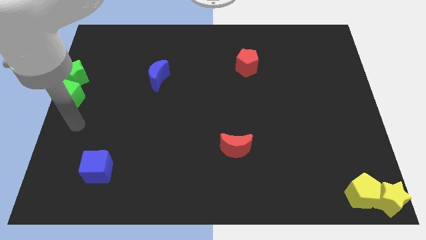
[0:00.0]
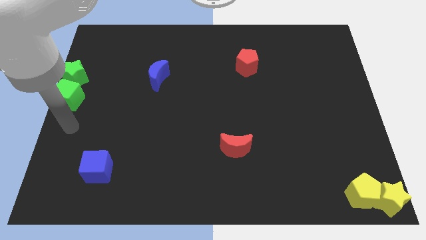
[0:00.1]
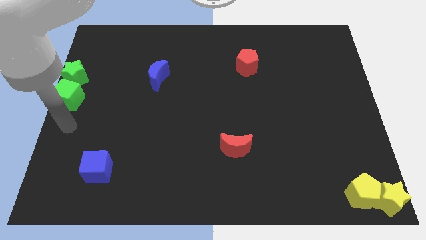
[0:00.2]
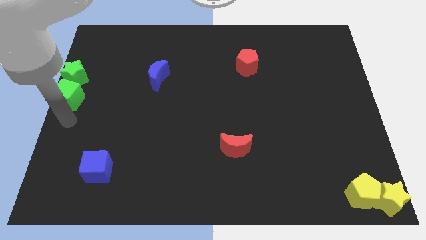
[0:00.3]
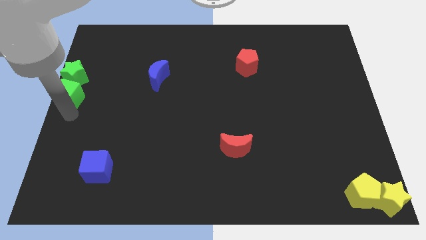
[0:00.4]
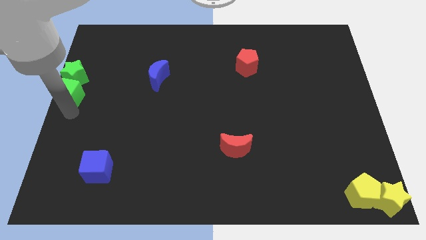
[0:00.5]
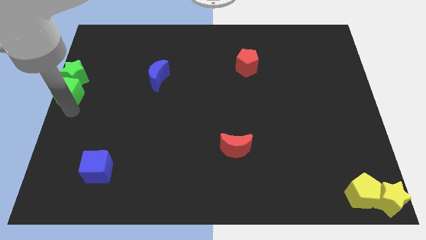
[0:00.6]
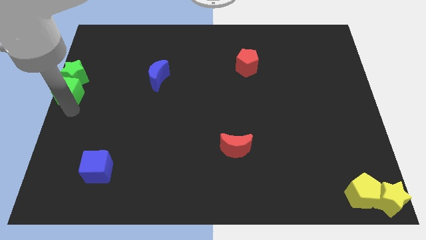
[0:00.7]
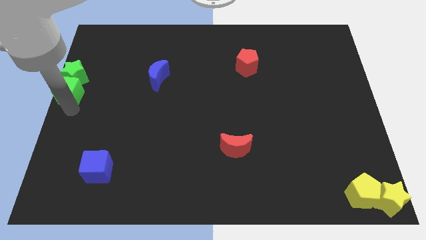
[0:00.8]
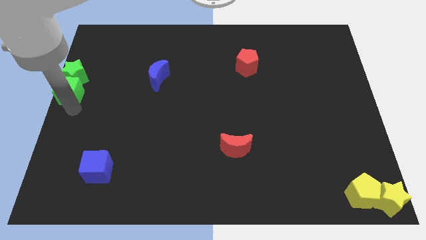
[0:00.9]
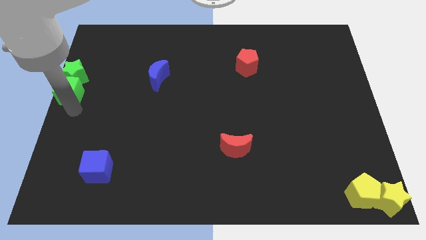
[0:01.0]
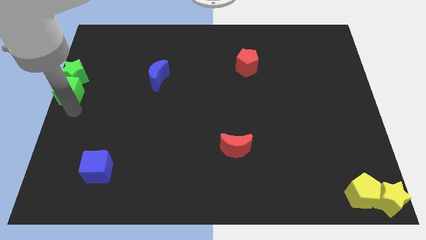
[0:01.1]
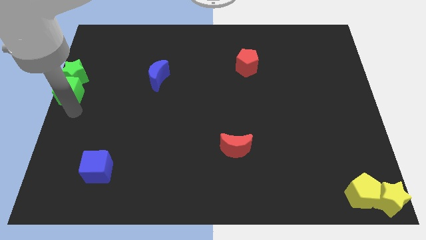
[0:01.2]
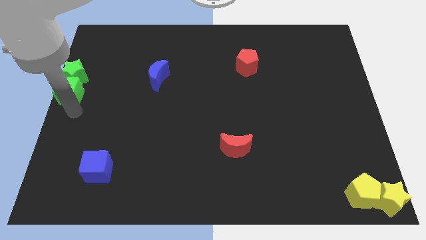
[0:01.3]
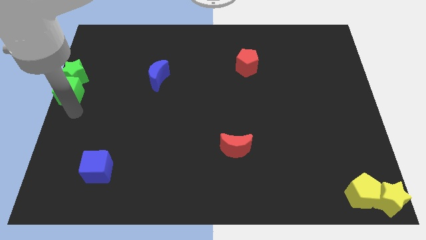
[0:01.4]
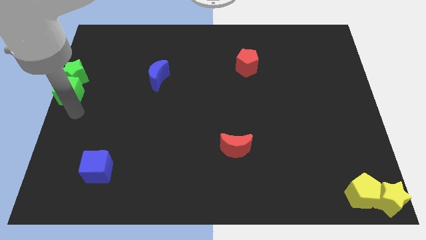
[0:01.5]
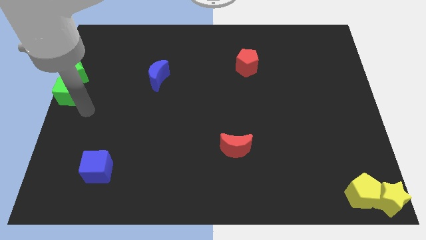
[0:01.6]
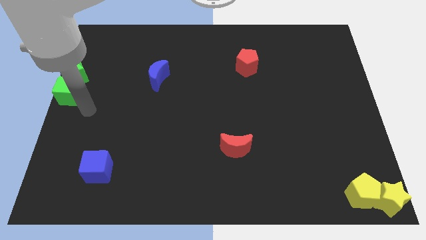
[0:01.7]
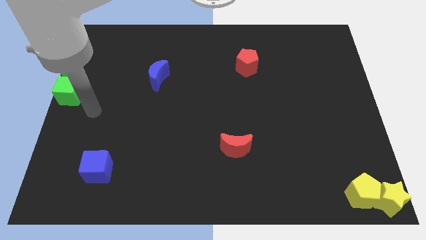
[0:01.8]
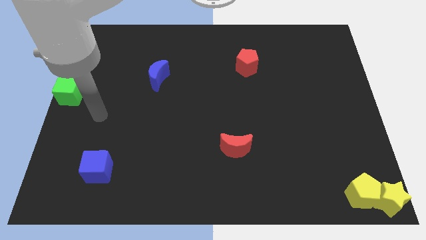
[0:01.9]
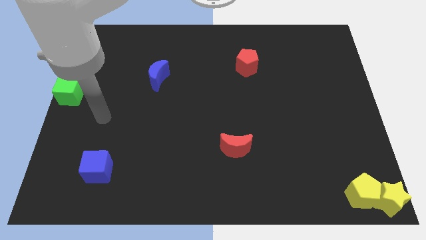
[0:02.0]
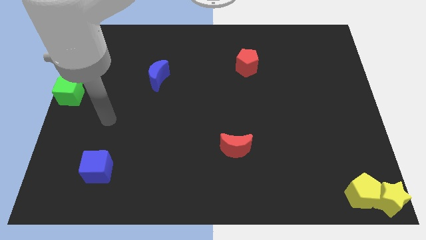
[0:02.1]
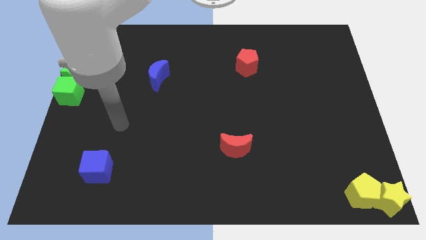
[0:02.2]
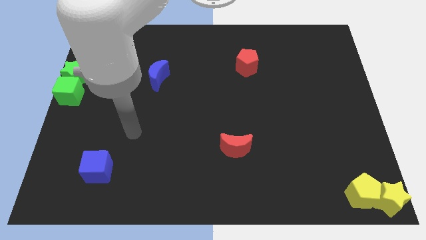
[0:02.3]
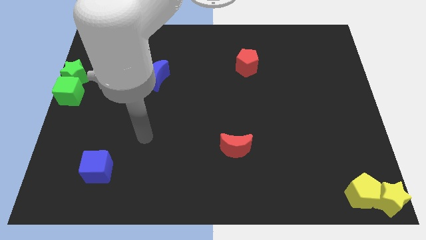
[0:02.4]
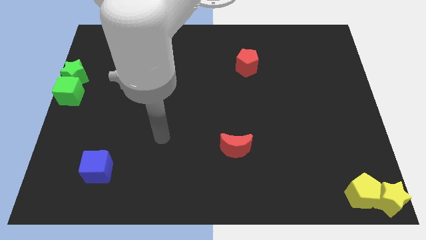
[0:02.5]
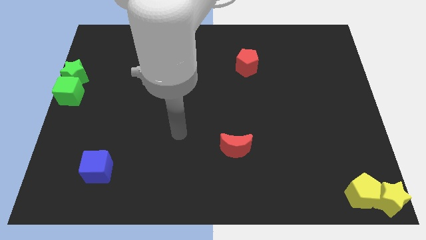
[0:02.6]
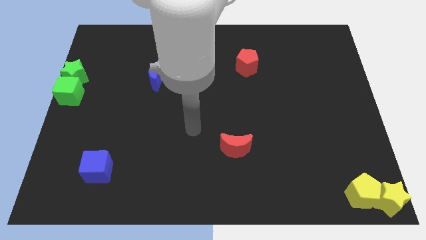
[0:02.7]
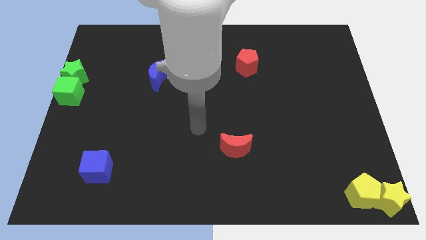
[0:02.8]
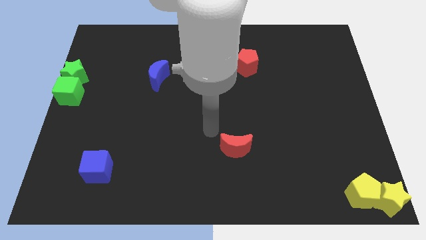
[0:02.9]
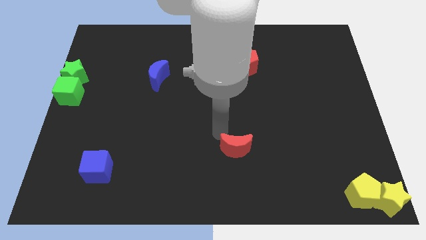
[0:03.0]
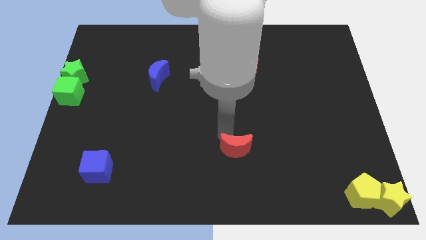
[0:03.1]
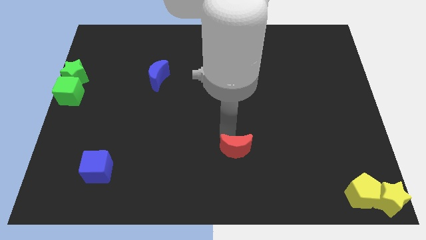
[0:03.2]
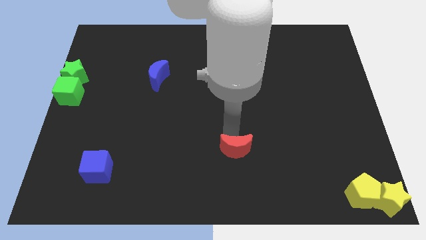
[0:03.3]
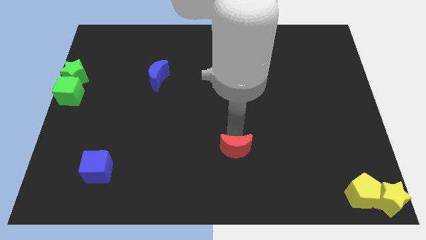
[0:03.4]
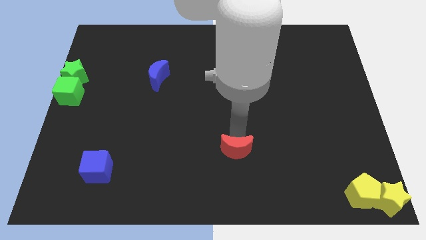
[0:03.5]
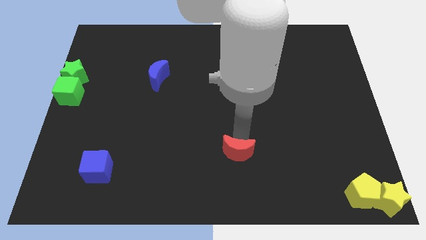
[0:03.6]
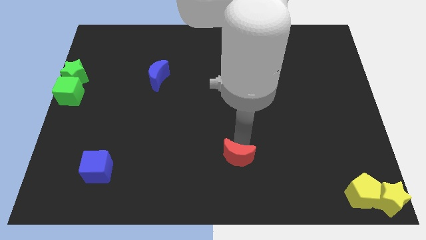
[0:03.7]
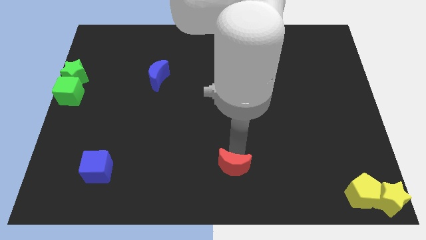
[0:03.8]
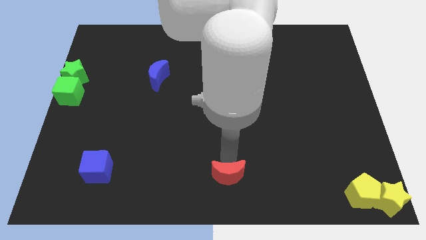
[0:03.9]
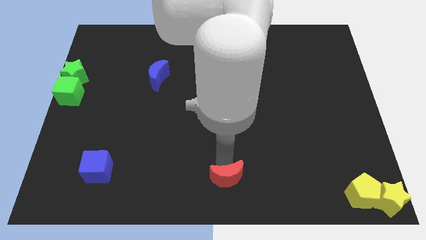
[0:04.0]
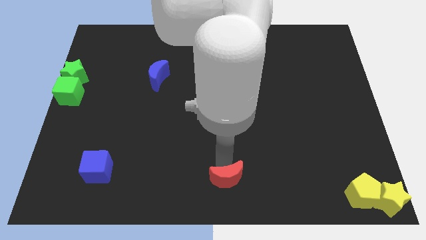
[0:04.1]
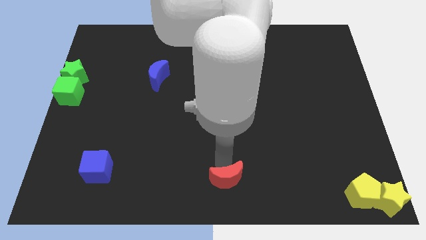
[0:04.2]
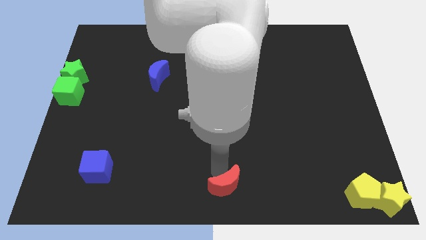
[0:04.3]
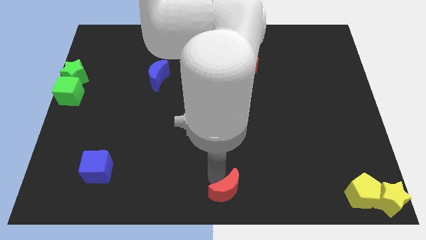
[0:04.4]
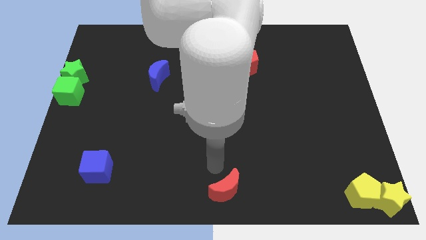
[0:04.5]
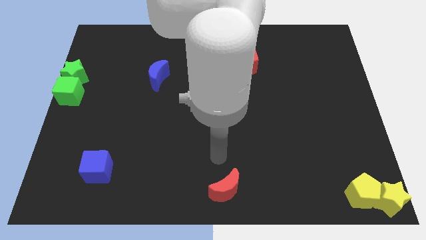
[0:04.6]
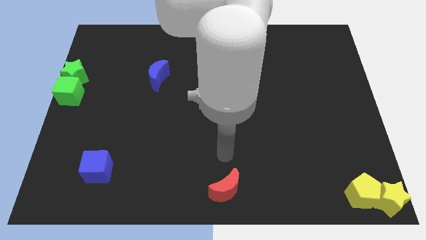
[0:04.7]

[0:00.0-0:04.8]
drag the red crescent towards the bottom center

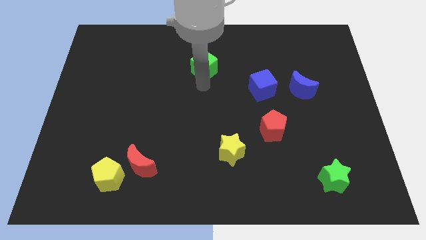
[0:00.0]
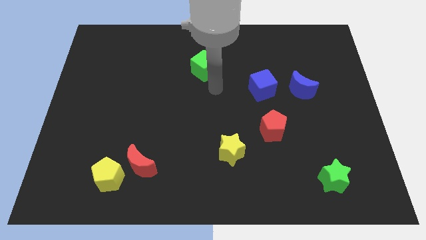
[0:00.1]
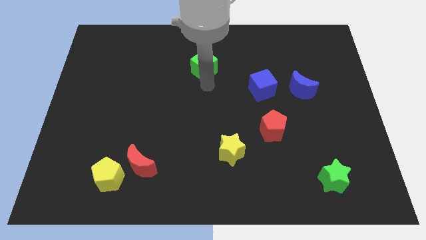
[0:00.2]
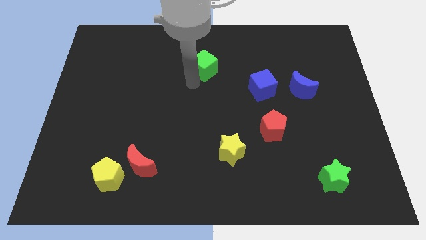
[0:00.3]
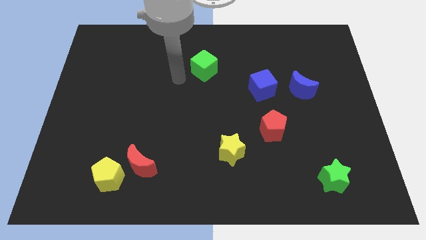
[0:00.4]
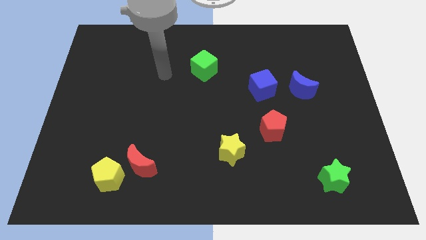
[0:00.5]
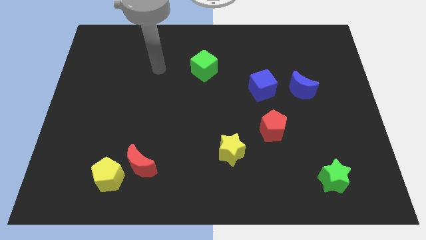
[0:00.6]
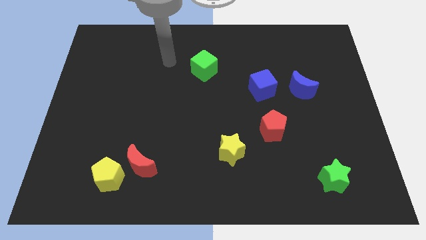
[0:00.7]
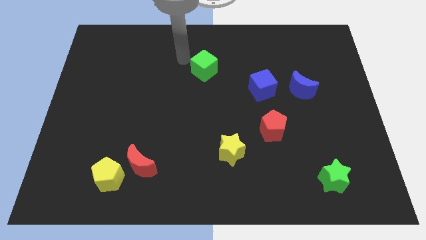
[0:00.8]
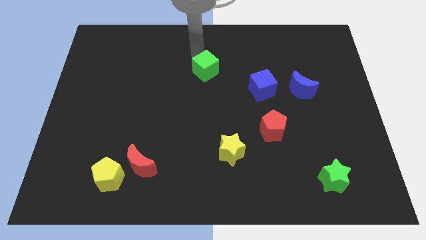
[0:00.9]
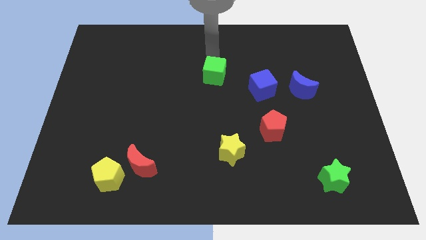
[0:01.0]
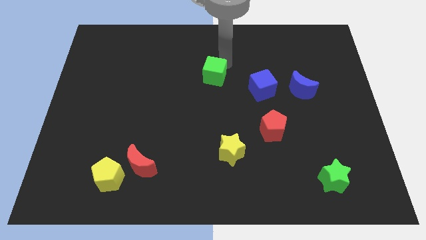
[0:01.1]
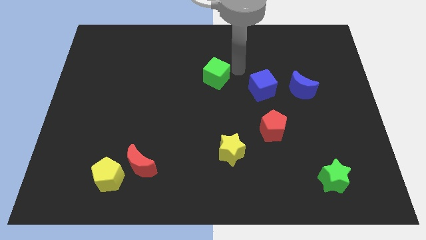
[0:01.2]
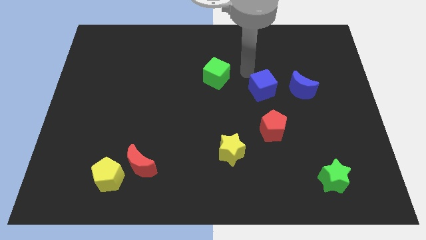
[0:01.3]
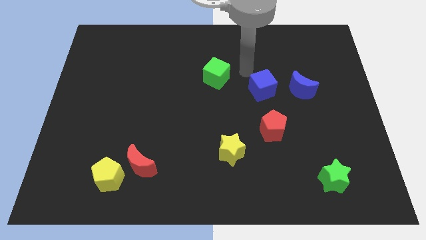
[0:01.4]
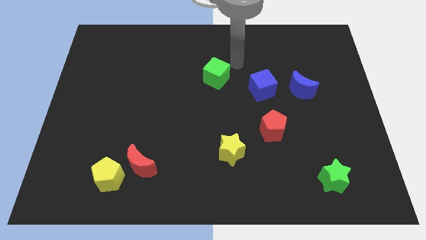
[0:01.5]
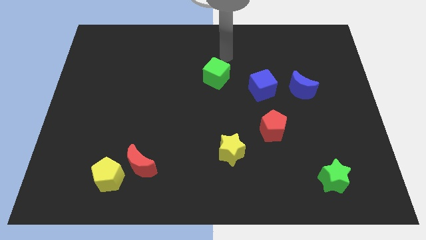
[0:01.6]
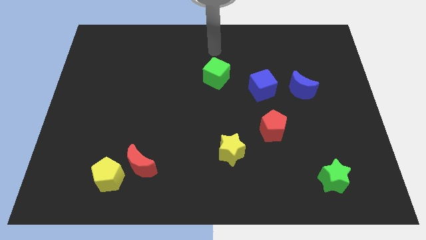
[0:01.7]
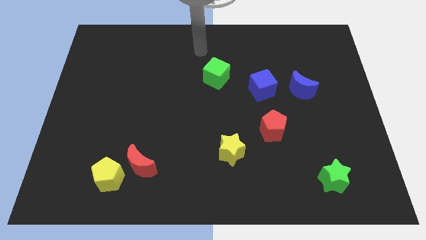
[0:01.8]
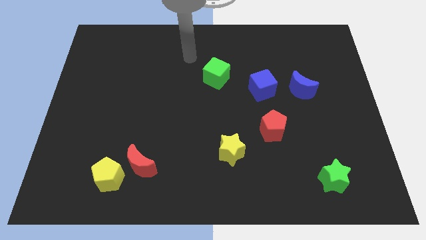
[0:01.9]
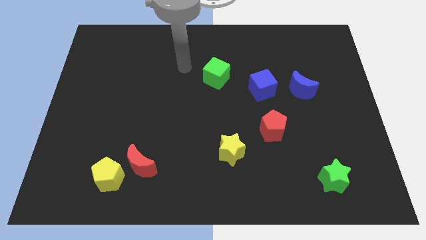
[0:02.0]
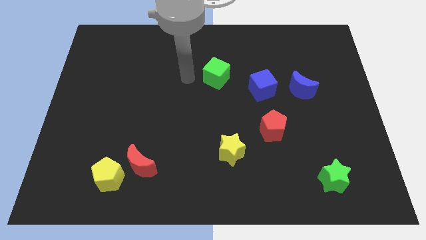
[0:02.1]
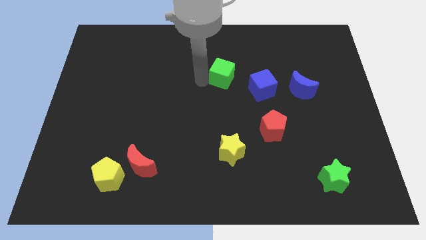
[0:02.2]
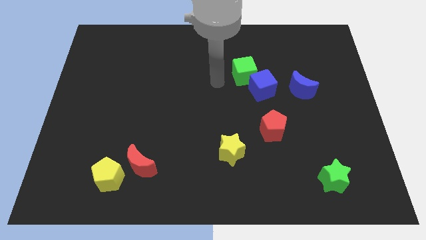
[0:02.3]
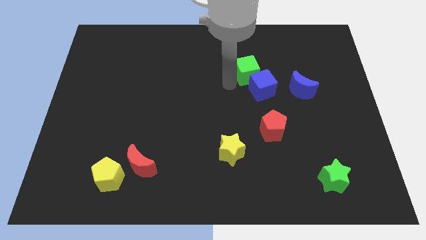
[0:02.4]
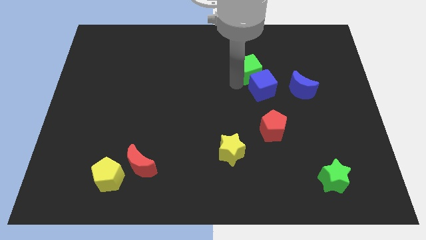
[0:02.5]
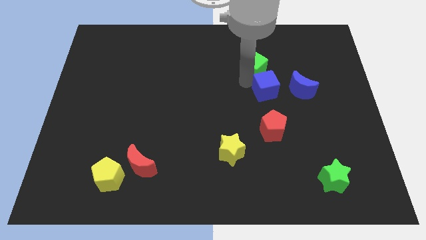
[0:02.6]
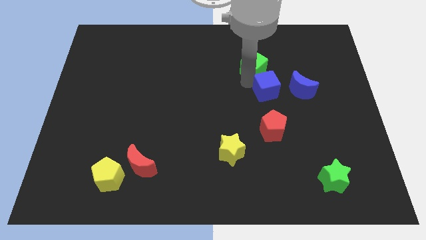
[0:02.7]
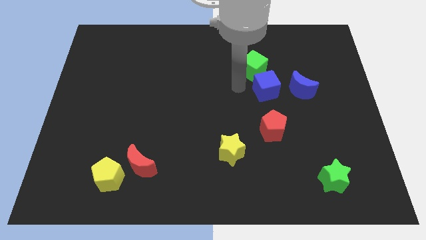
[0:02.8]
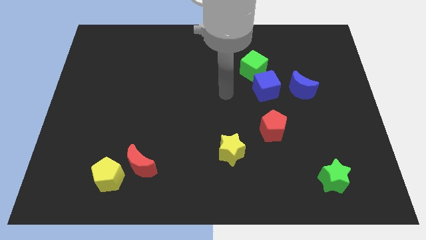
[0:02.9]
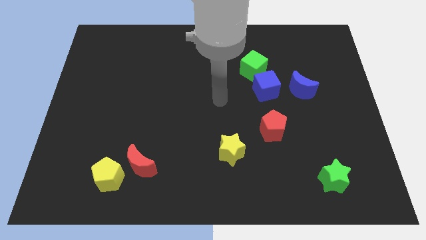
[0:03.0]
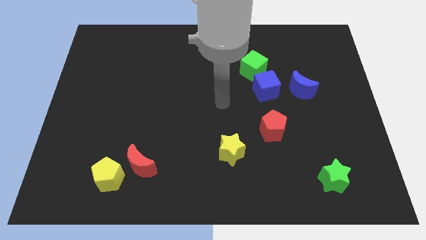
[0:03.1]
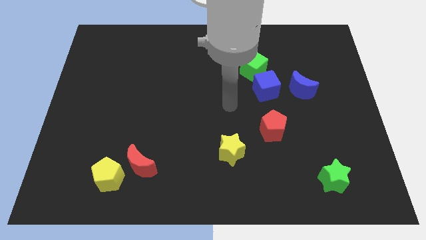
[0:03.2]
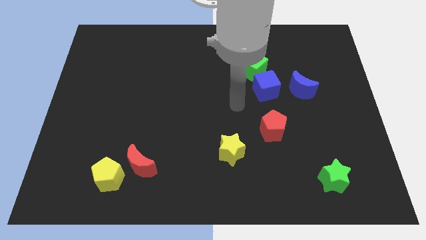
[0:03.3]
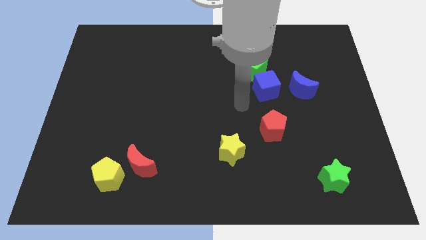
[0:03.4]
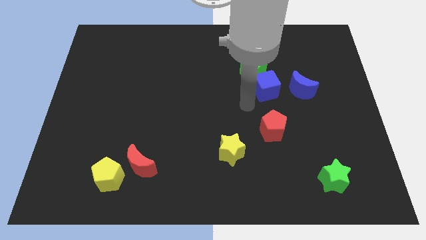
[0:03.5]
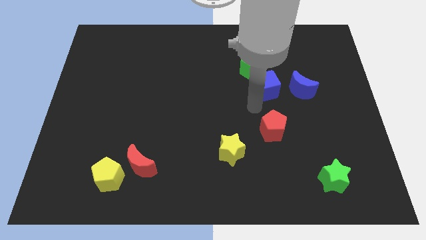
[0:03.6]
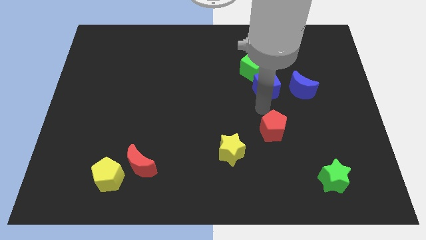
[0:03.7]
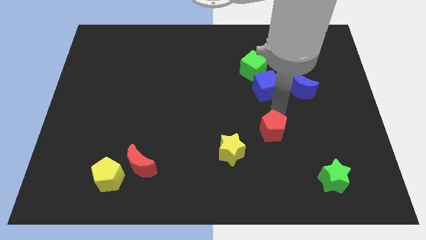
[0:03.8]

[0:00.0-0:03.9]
place the green cube at the top of the blue cube

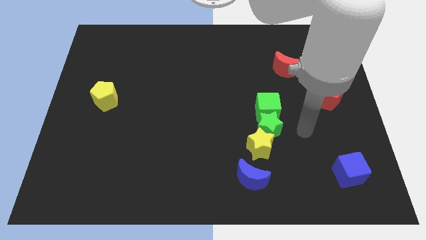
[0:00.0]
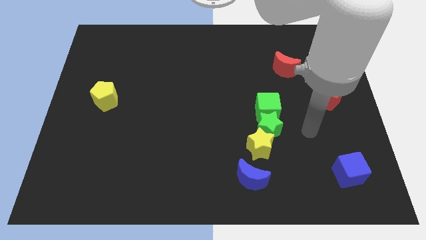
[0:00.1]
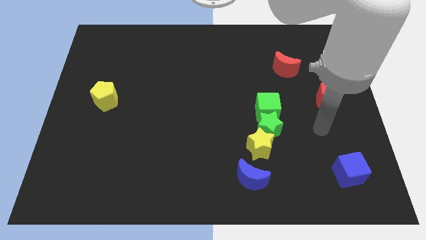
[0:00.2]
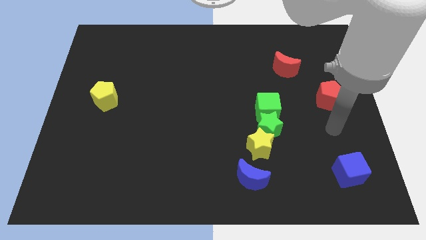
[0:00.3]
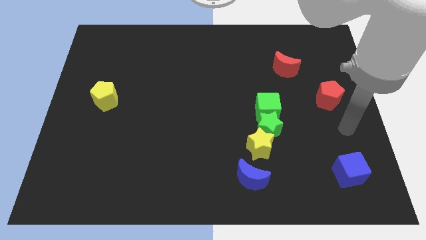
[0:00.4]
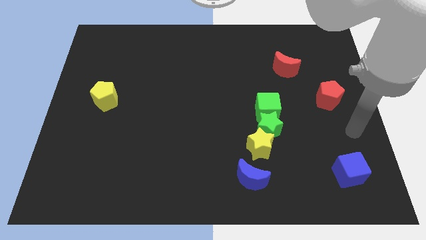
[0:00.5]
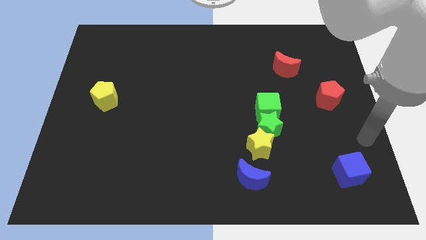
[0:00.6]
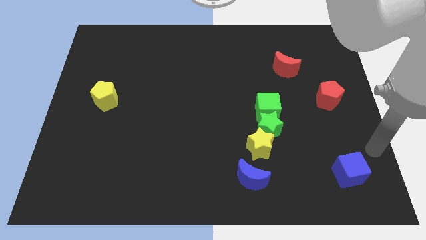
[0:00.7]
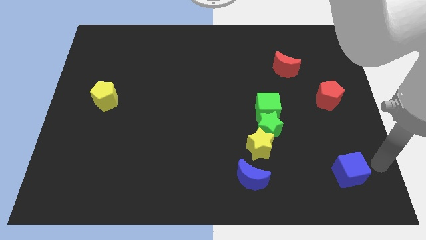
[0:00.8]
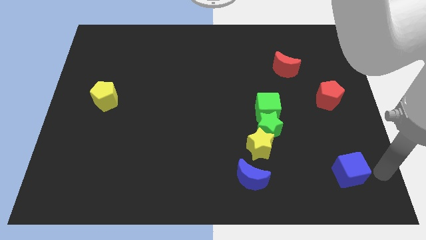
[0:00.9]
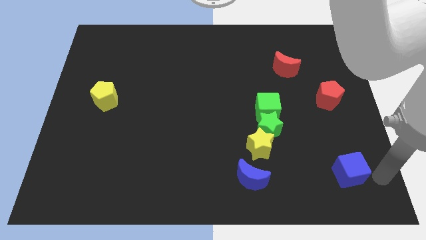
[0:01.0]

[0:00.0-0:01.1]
place arm near blue cube
